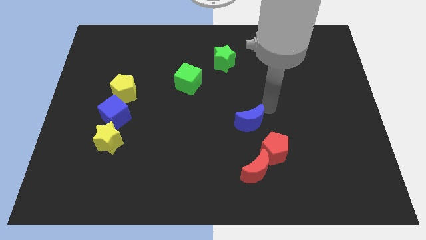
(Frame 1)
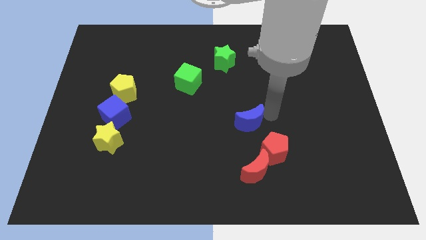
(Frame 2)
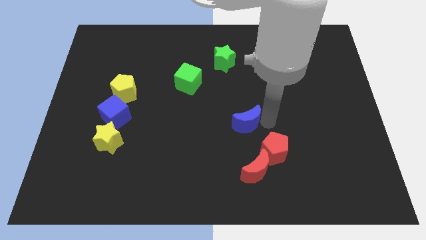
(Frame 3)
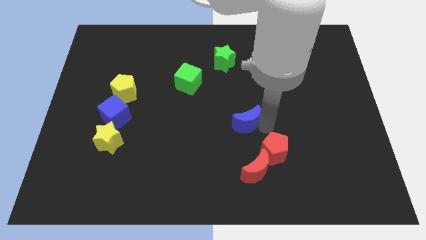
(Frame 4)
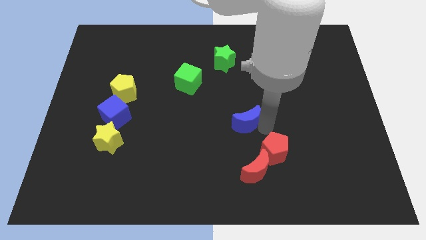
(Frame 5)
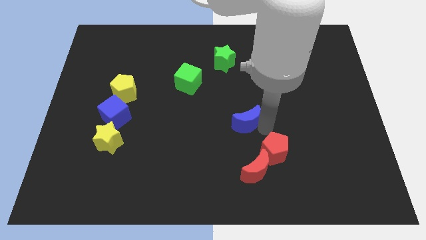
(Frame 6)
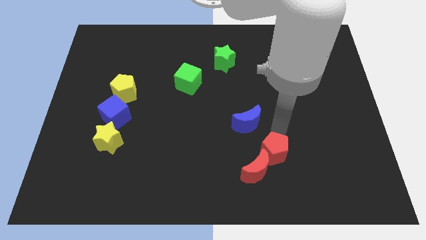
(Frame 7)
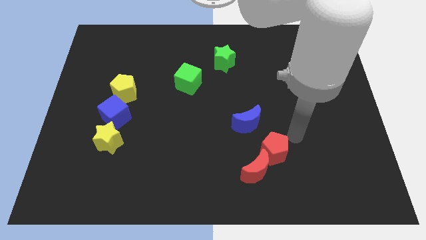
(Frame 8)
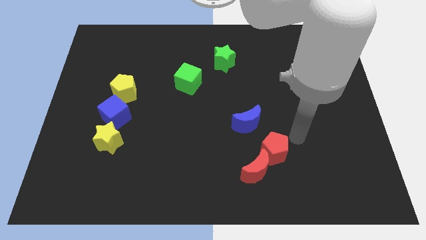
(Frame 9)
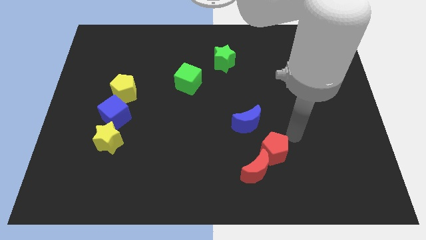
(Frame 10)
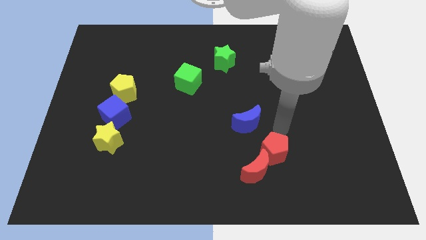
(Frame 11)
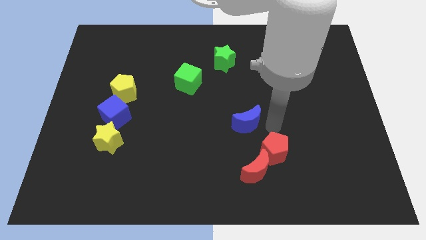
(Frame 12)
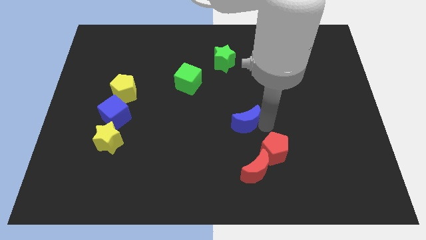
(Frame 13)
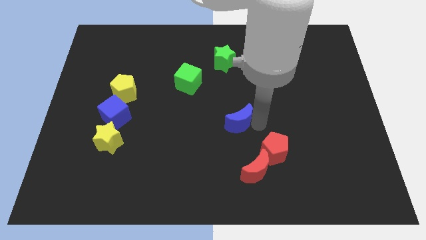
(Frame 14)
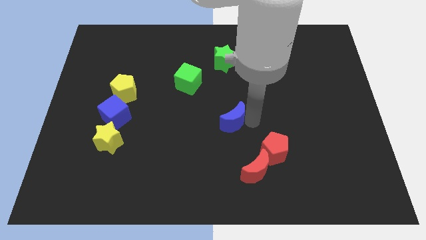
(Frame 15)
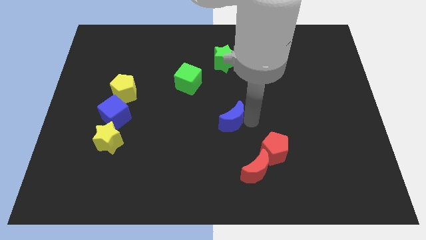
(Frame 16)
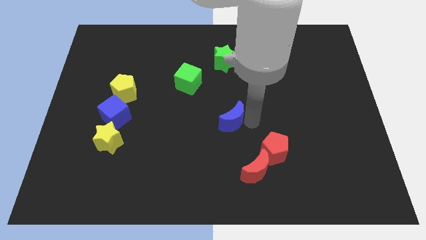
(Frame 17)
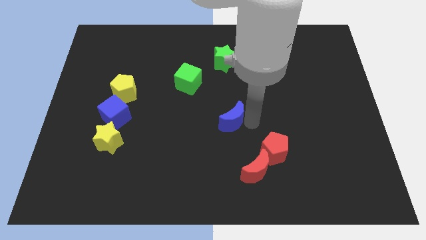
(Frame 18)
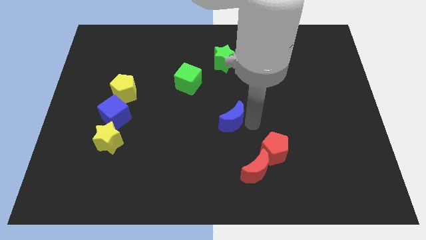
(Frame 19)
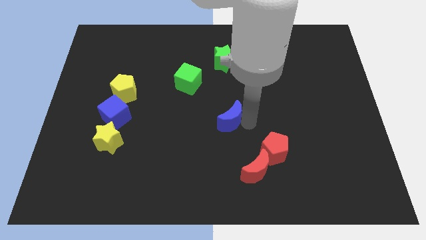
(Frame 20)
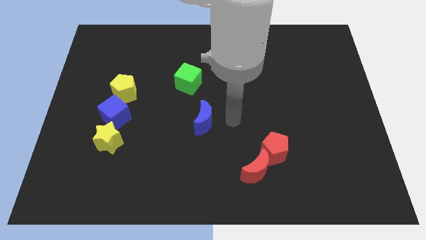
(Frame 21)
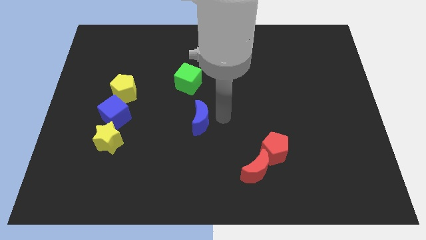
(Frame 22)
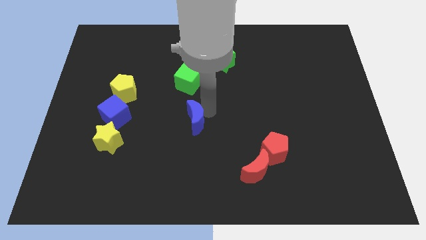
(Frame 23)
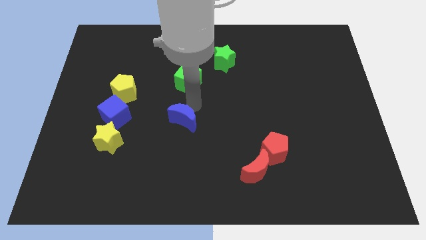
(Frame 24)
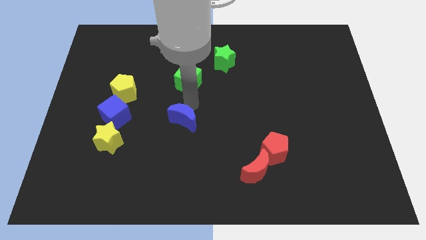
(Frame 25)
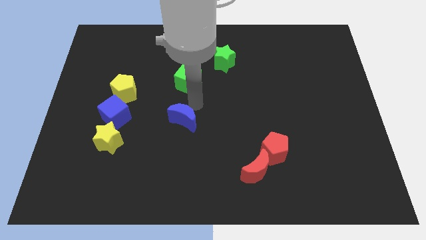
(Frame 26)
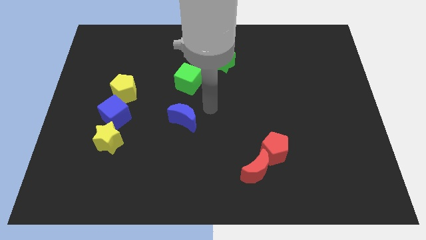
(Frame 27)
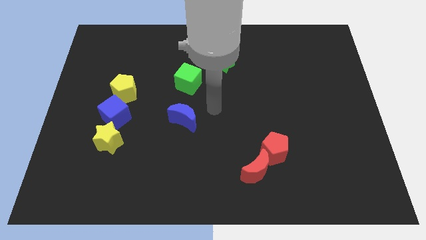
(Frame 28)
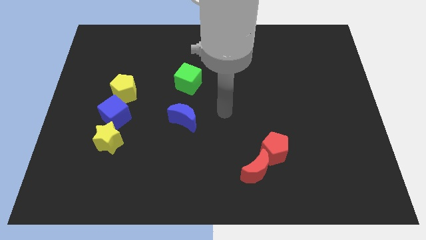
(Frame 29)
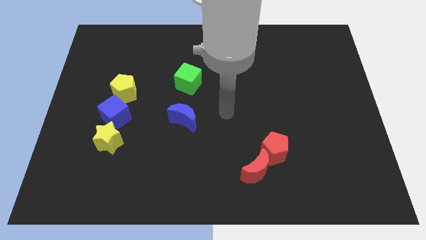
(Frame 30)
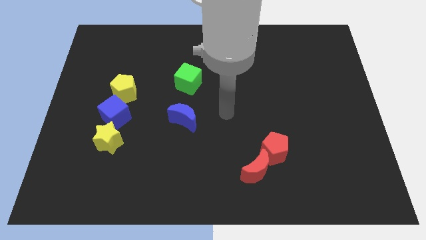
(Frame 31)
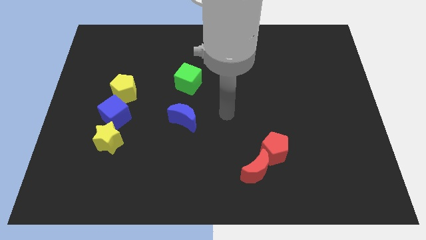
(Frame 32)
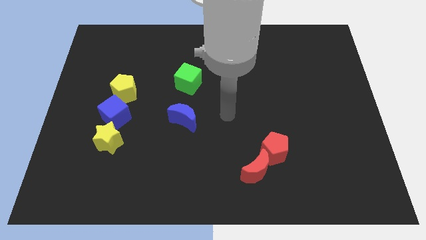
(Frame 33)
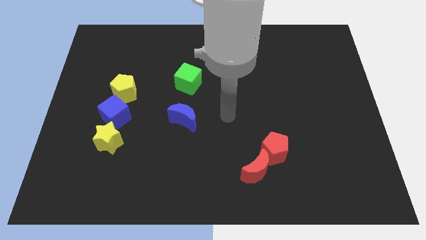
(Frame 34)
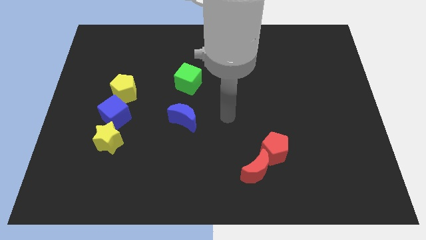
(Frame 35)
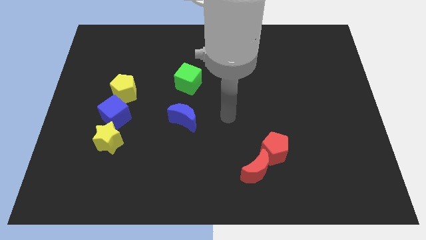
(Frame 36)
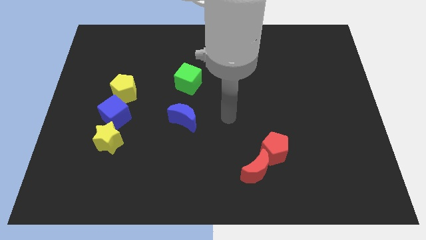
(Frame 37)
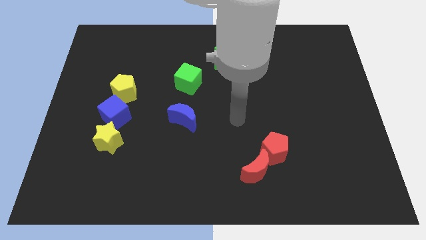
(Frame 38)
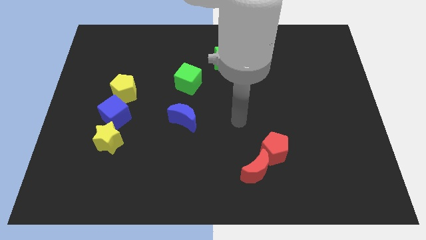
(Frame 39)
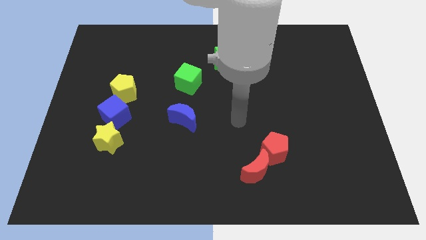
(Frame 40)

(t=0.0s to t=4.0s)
place the blue moon to the right of the blue cube

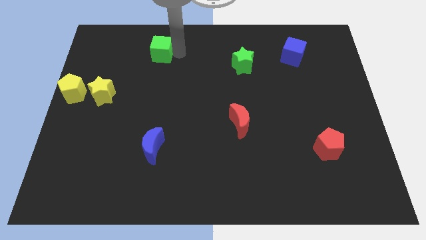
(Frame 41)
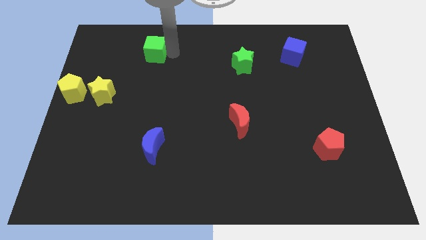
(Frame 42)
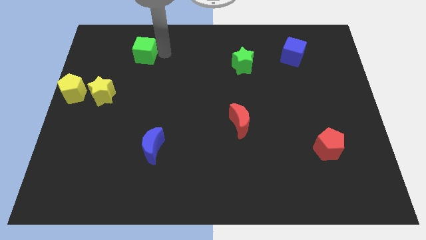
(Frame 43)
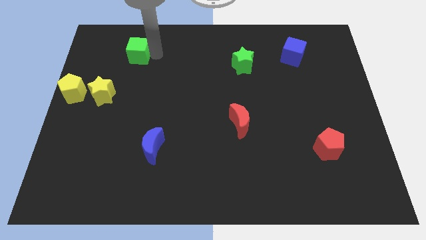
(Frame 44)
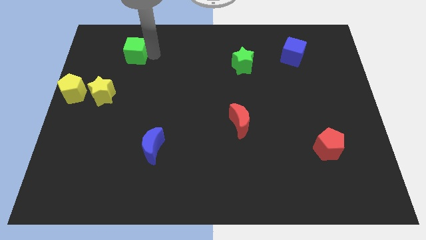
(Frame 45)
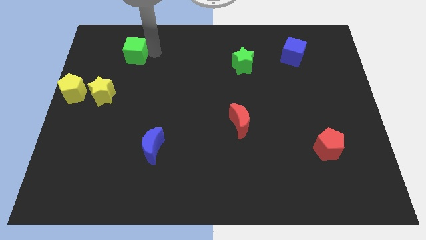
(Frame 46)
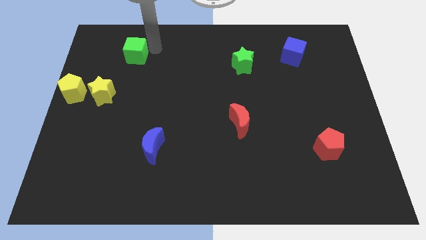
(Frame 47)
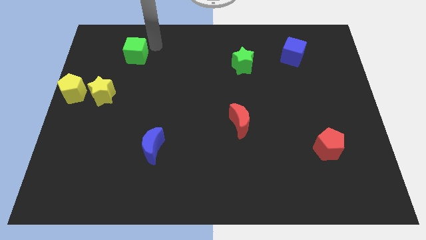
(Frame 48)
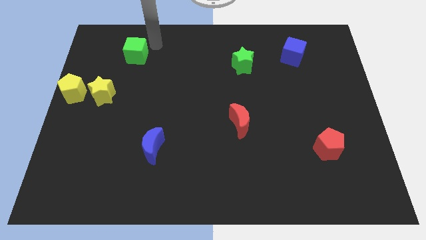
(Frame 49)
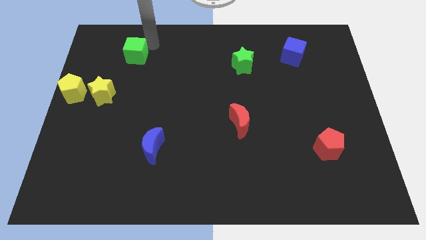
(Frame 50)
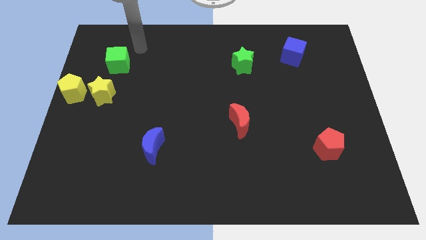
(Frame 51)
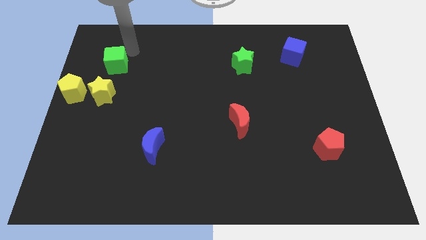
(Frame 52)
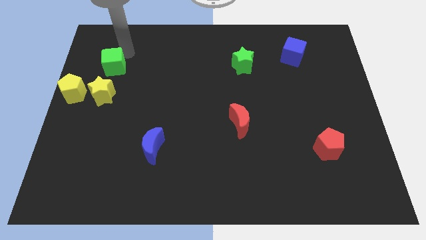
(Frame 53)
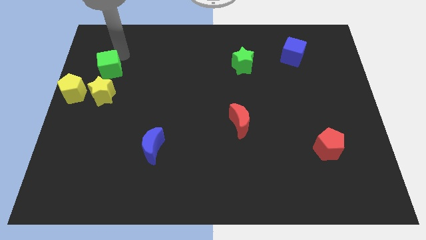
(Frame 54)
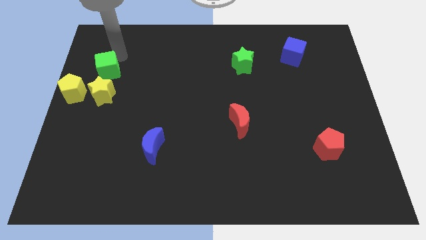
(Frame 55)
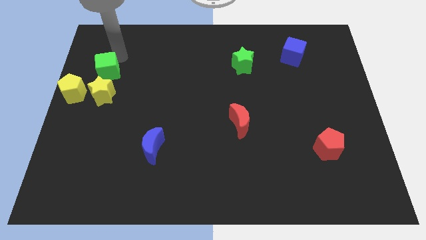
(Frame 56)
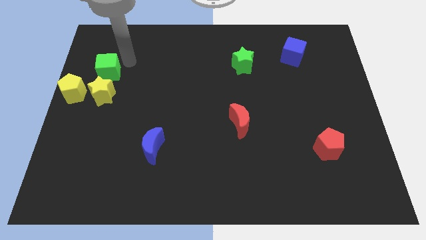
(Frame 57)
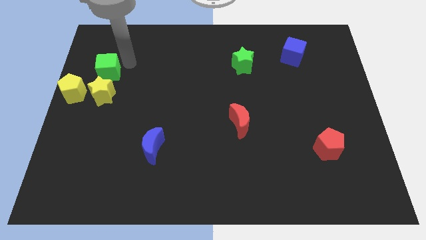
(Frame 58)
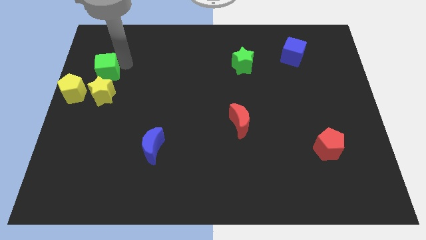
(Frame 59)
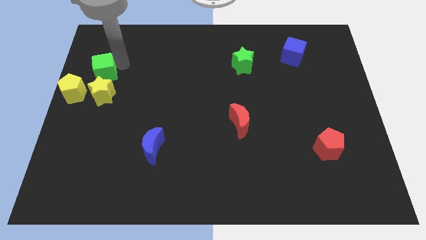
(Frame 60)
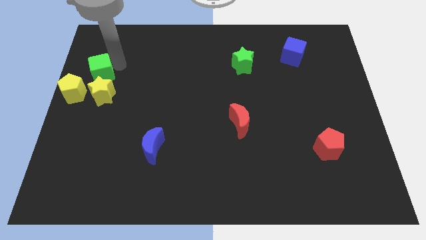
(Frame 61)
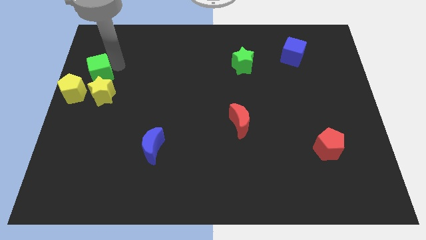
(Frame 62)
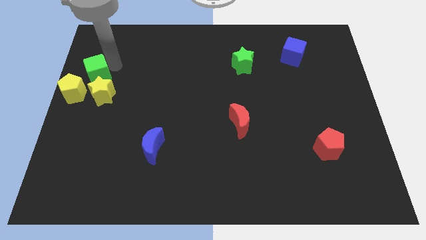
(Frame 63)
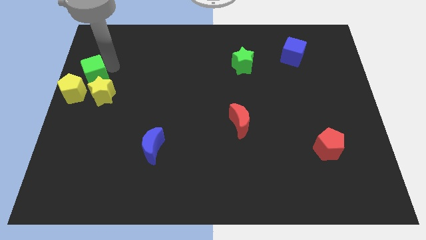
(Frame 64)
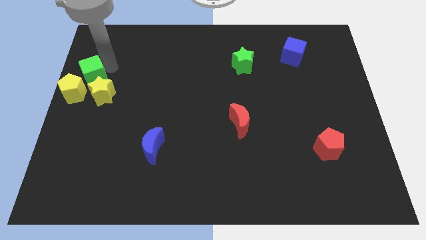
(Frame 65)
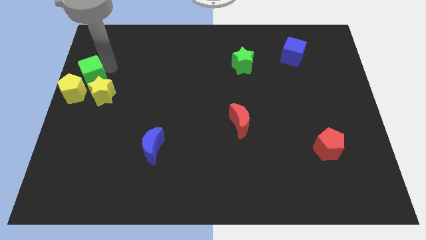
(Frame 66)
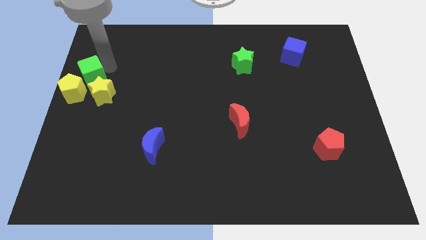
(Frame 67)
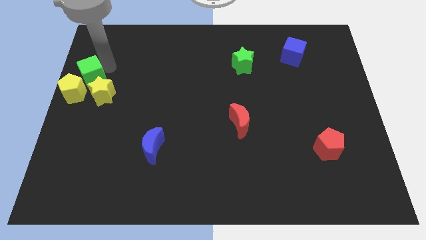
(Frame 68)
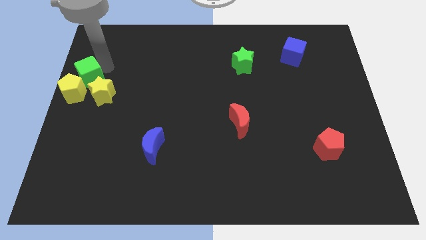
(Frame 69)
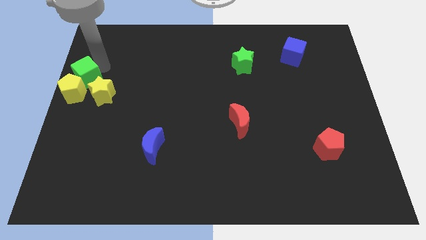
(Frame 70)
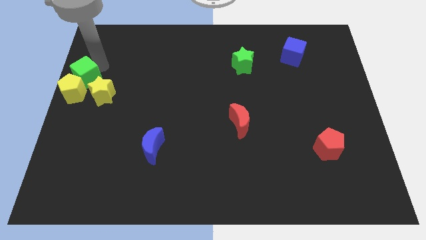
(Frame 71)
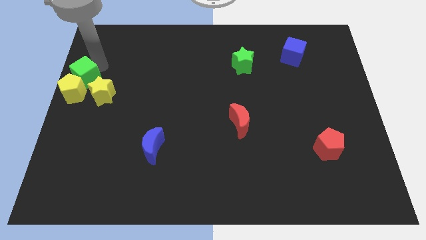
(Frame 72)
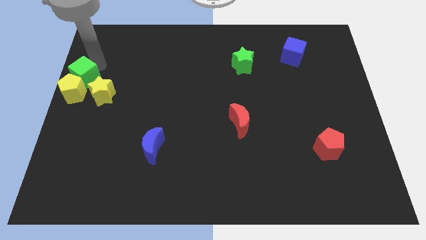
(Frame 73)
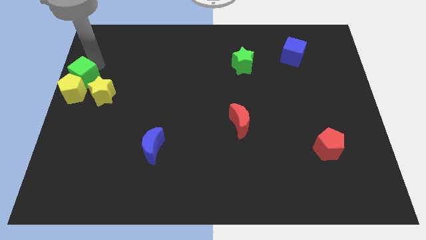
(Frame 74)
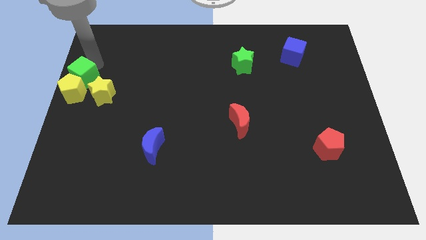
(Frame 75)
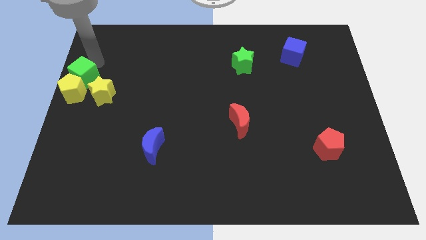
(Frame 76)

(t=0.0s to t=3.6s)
place the green cube above the yellow pentagon at the left

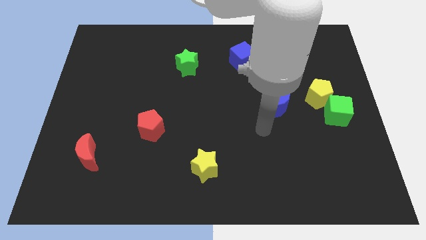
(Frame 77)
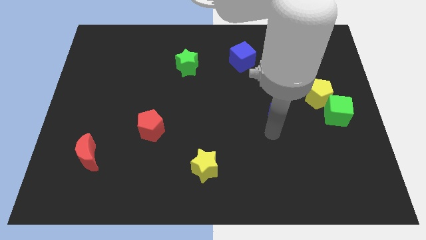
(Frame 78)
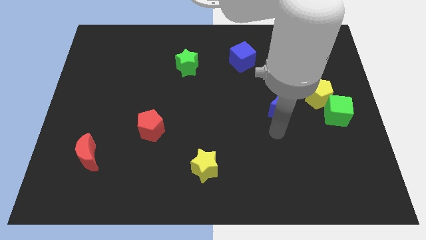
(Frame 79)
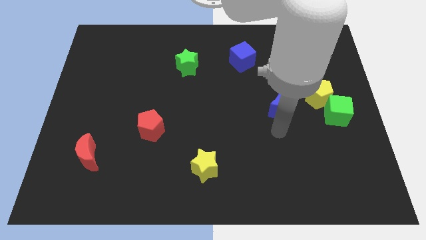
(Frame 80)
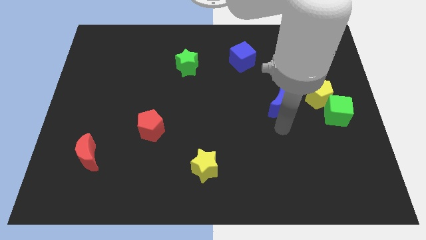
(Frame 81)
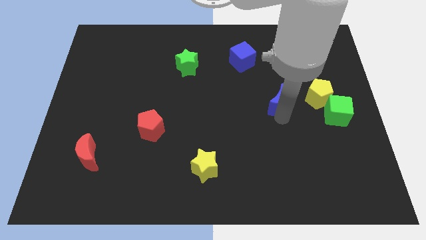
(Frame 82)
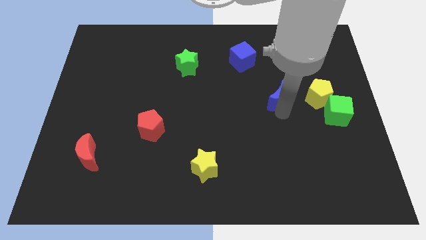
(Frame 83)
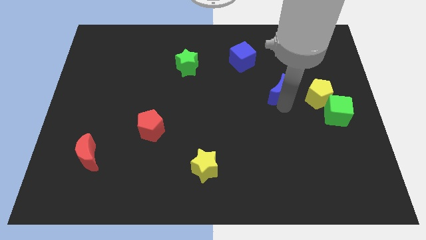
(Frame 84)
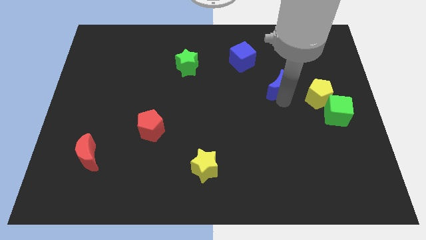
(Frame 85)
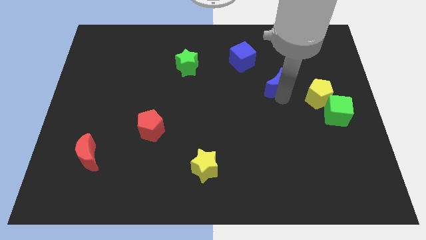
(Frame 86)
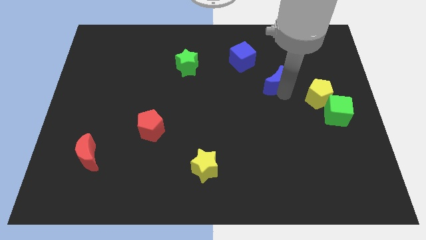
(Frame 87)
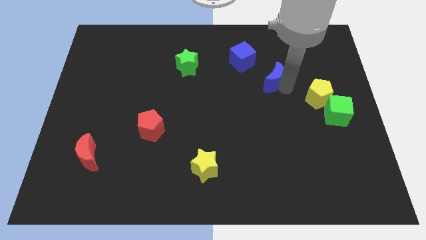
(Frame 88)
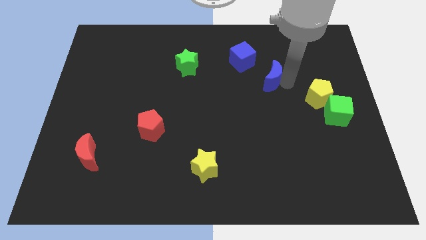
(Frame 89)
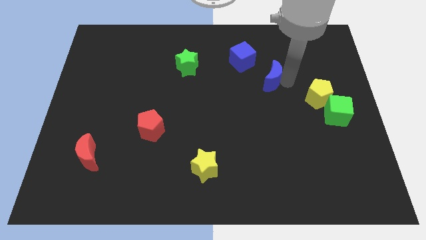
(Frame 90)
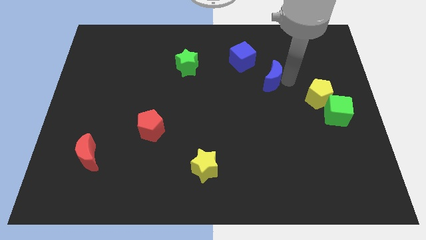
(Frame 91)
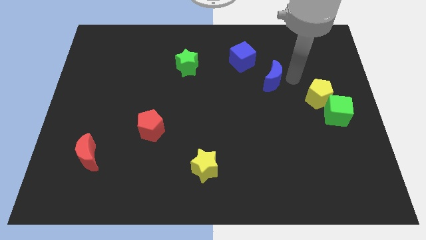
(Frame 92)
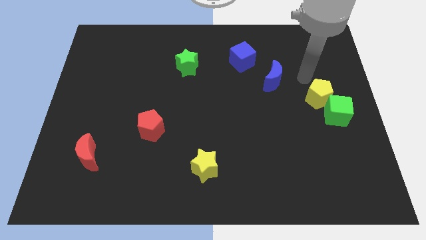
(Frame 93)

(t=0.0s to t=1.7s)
push the blue crescent towards the blue cube
